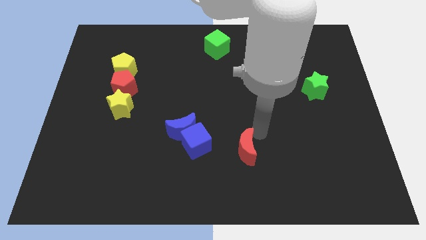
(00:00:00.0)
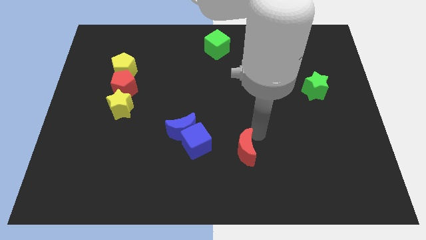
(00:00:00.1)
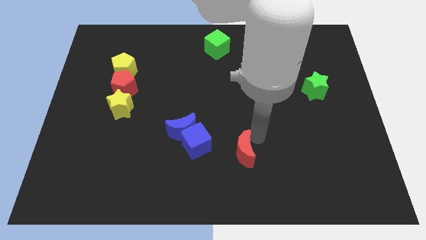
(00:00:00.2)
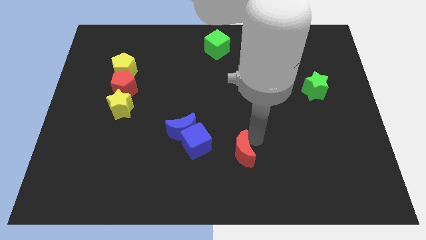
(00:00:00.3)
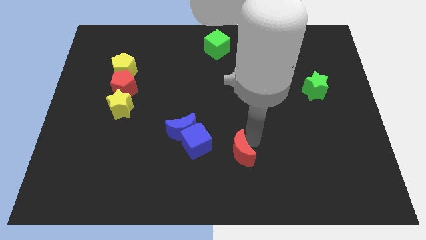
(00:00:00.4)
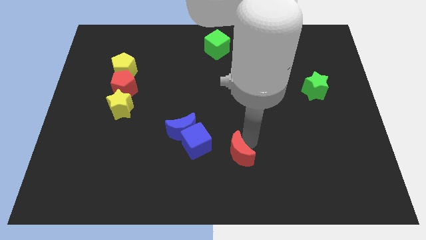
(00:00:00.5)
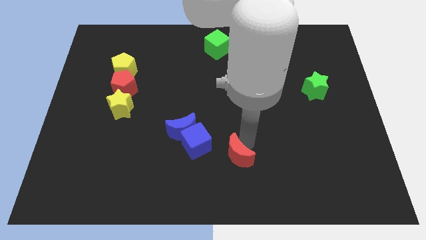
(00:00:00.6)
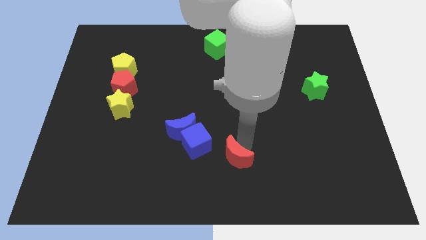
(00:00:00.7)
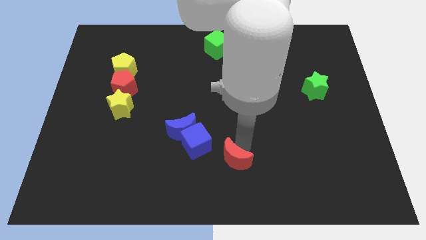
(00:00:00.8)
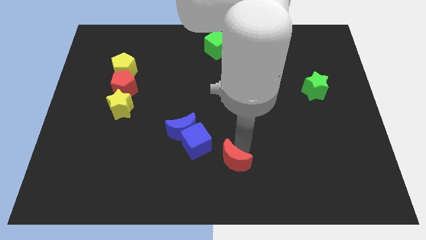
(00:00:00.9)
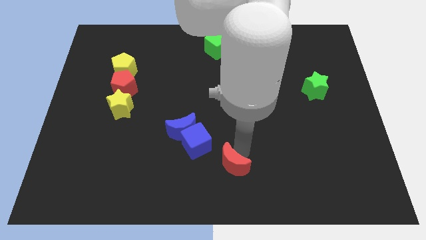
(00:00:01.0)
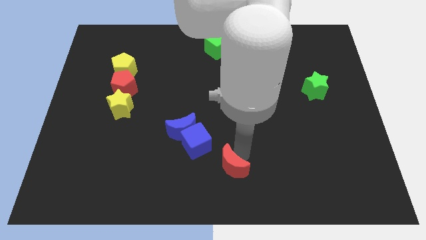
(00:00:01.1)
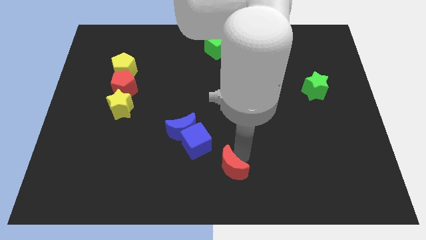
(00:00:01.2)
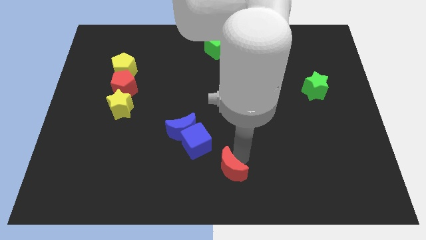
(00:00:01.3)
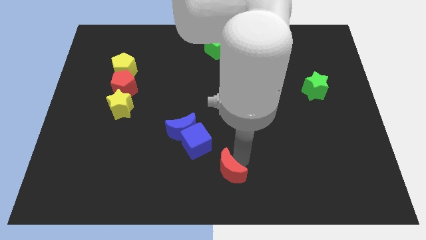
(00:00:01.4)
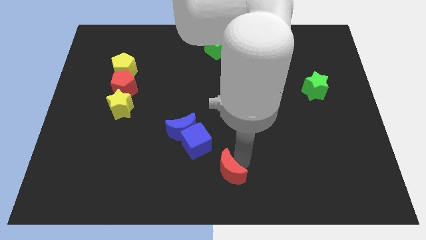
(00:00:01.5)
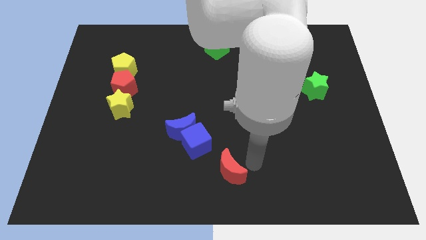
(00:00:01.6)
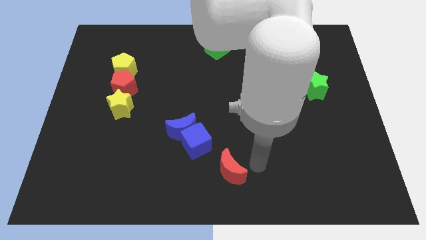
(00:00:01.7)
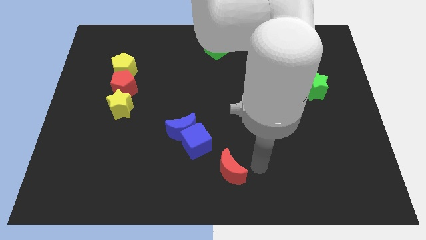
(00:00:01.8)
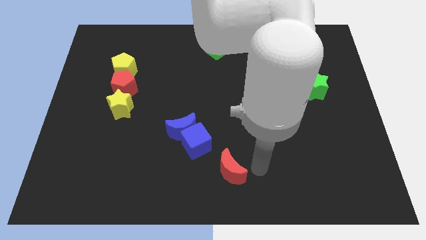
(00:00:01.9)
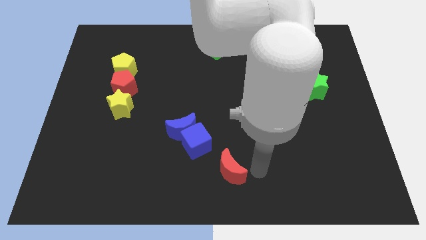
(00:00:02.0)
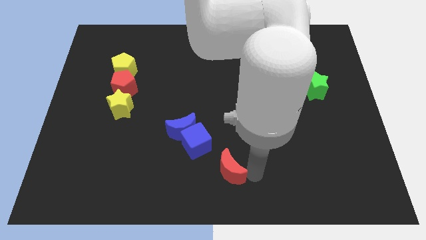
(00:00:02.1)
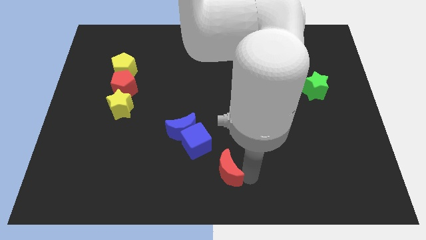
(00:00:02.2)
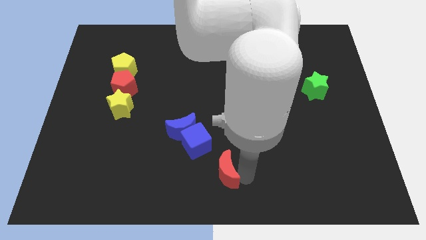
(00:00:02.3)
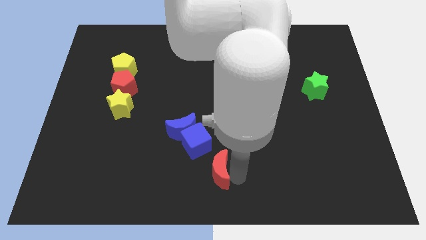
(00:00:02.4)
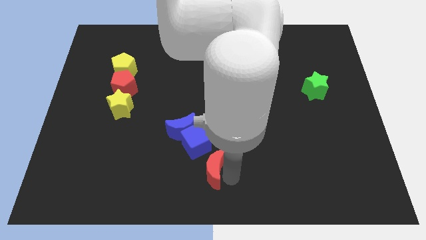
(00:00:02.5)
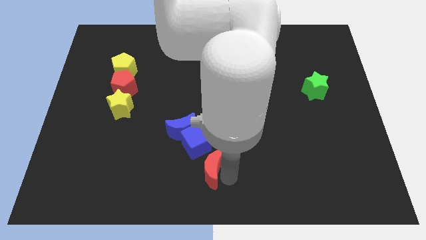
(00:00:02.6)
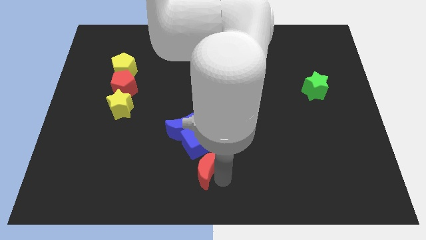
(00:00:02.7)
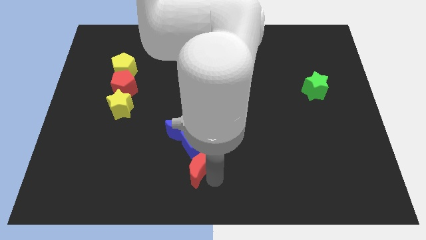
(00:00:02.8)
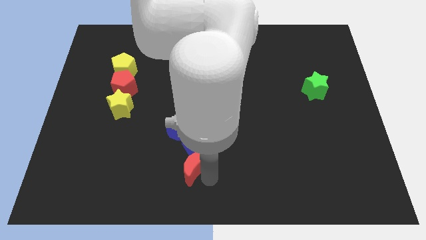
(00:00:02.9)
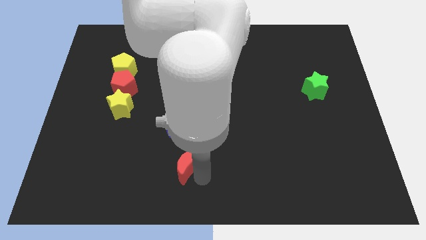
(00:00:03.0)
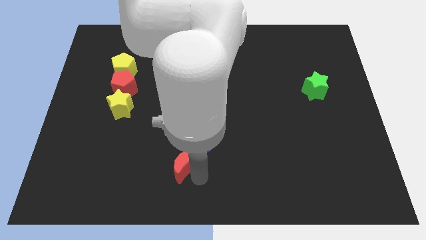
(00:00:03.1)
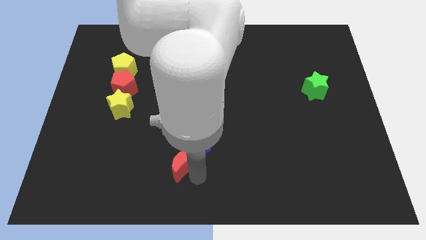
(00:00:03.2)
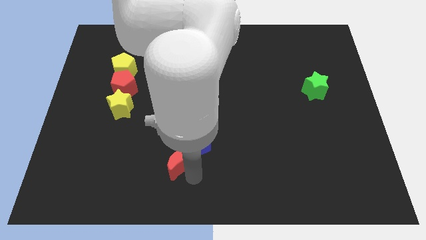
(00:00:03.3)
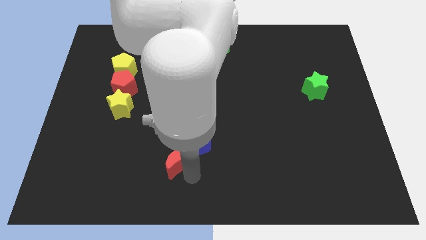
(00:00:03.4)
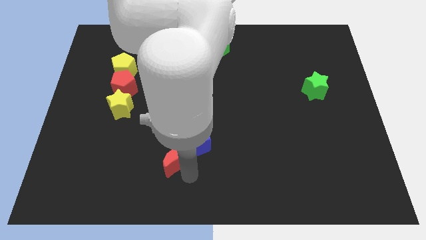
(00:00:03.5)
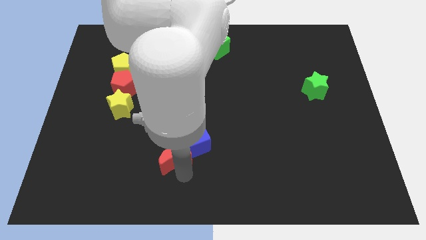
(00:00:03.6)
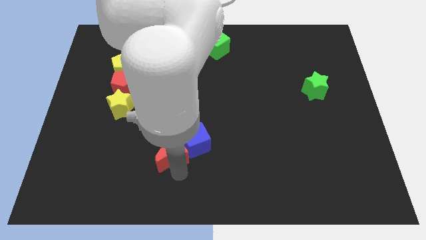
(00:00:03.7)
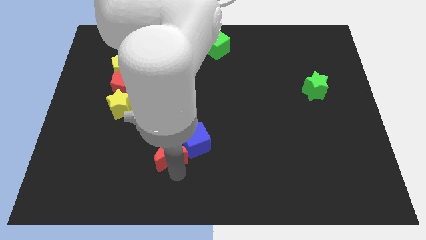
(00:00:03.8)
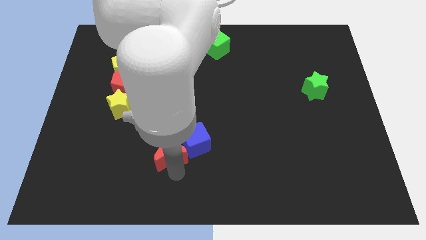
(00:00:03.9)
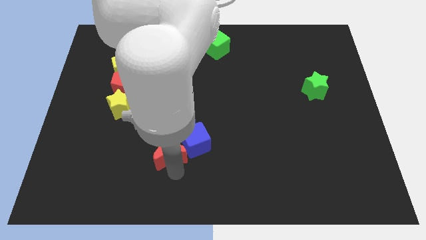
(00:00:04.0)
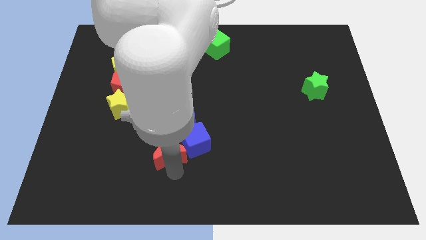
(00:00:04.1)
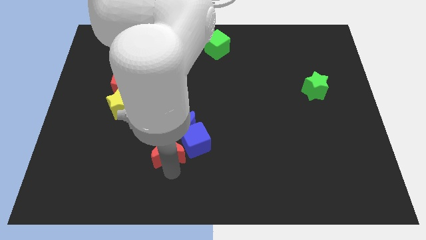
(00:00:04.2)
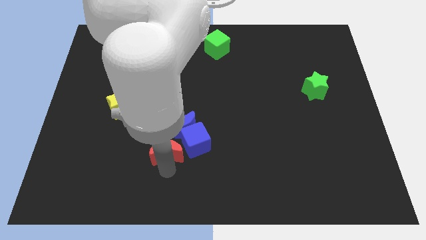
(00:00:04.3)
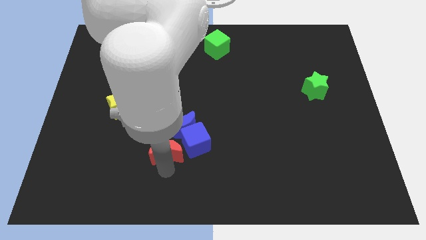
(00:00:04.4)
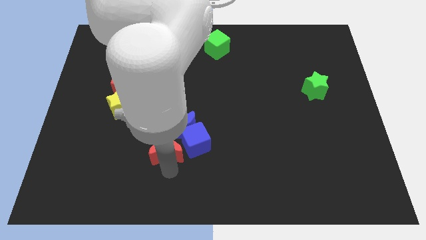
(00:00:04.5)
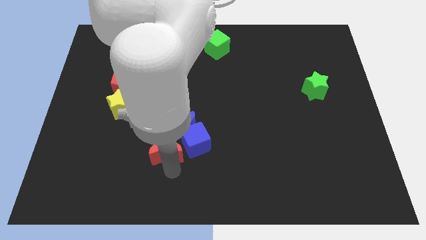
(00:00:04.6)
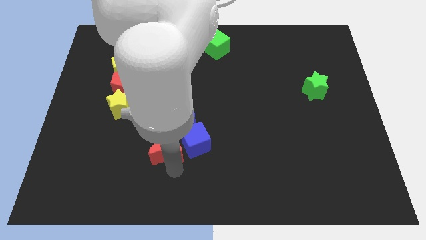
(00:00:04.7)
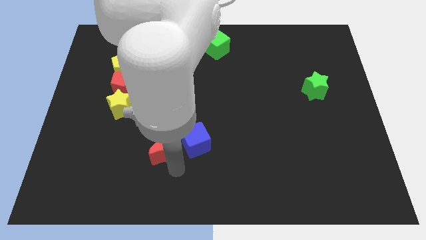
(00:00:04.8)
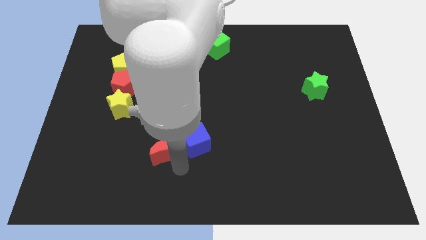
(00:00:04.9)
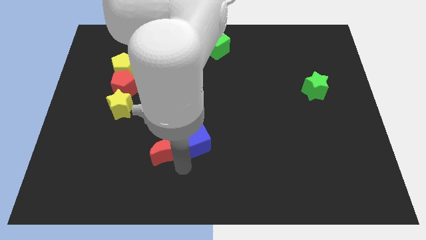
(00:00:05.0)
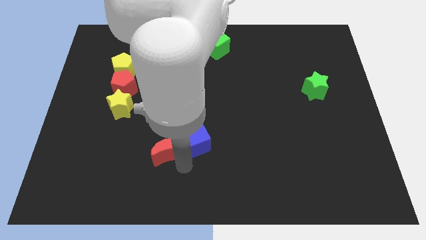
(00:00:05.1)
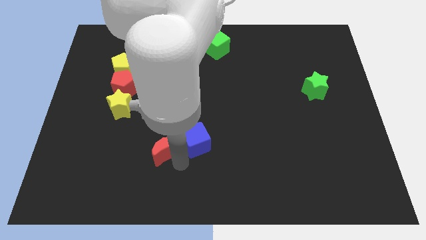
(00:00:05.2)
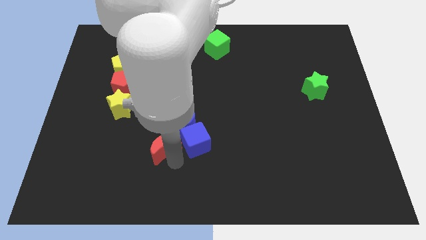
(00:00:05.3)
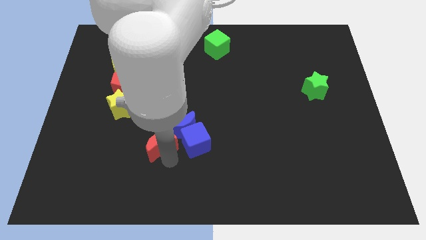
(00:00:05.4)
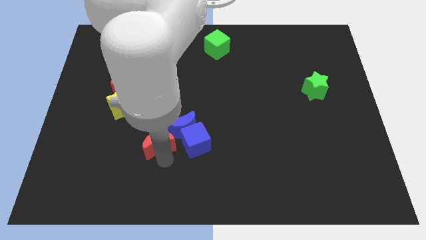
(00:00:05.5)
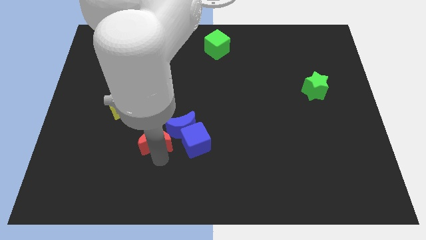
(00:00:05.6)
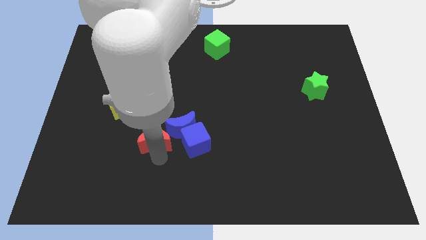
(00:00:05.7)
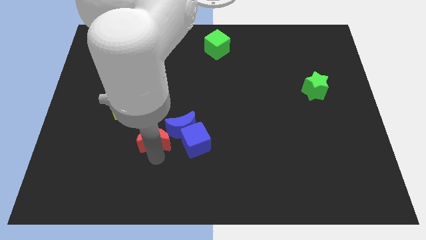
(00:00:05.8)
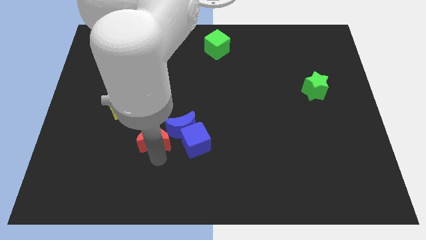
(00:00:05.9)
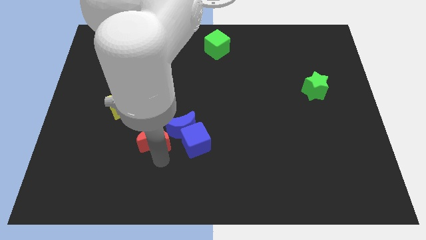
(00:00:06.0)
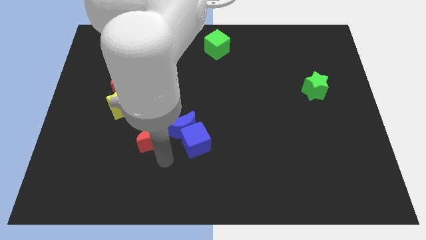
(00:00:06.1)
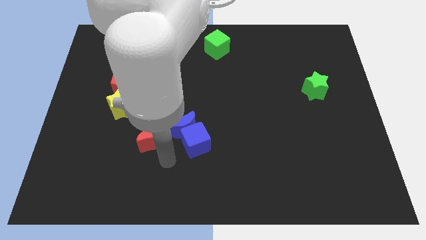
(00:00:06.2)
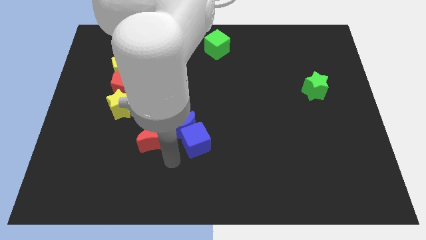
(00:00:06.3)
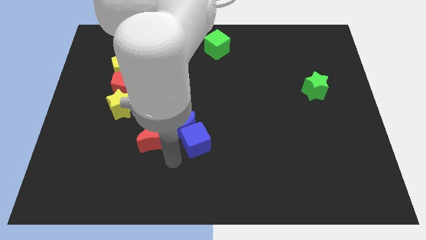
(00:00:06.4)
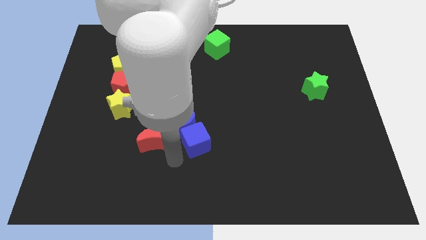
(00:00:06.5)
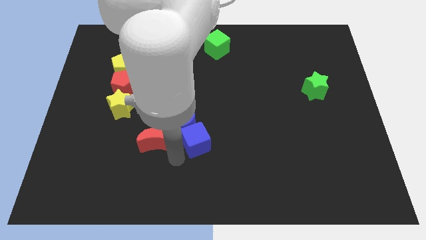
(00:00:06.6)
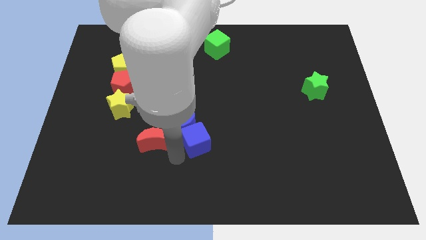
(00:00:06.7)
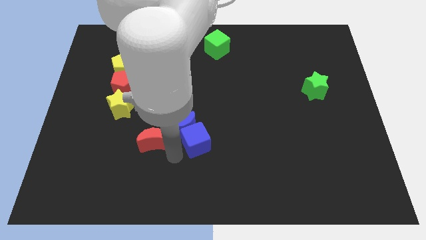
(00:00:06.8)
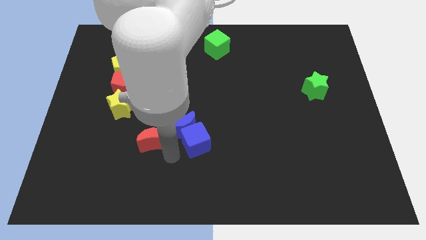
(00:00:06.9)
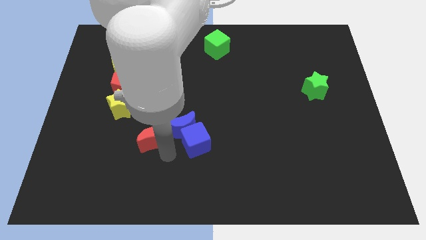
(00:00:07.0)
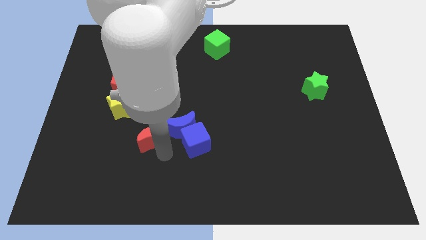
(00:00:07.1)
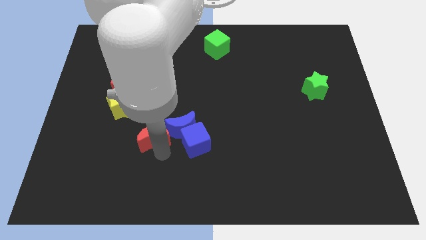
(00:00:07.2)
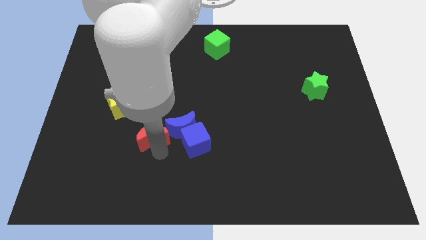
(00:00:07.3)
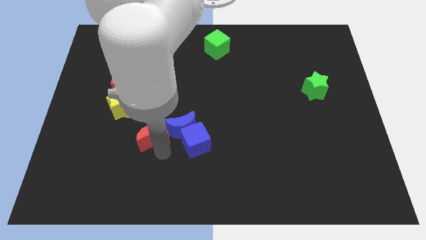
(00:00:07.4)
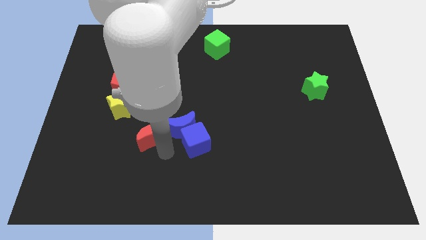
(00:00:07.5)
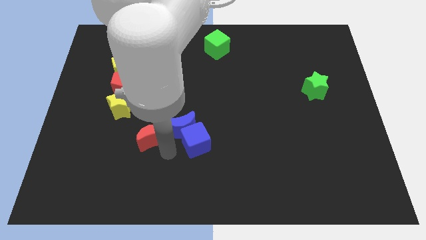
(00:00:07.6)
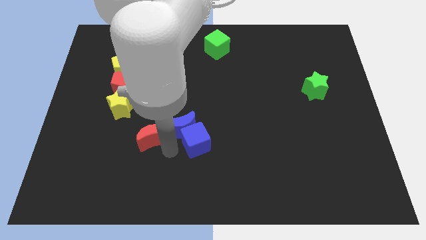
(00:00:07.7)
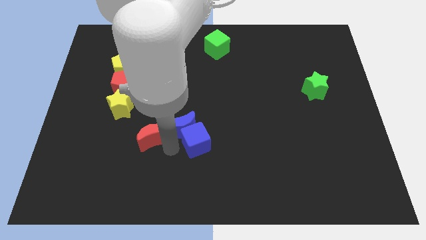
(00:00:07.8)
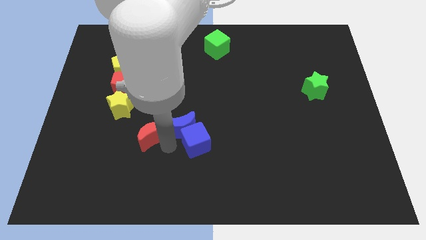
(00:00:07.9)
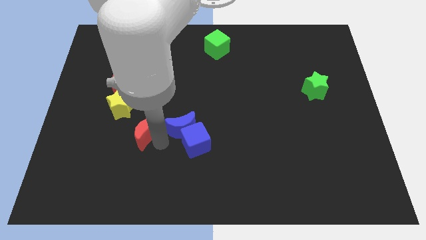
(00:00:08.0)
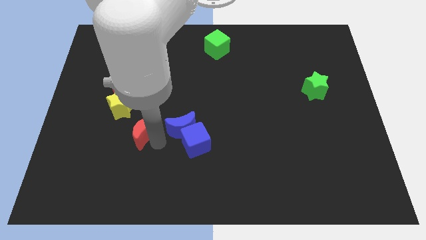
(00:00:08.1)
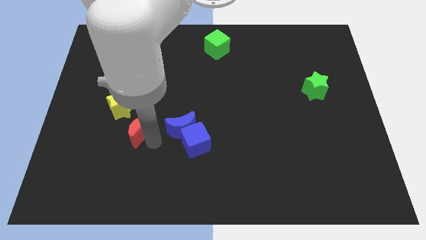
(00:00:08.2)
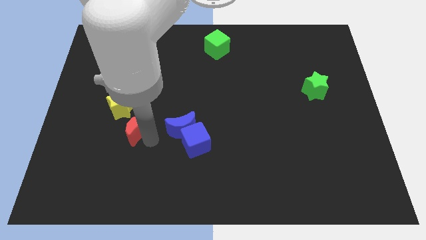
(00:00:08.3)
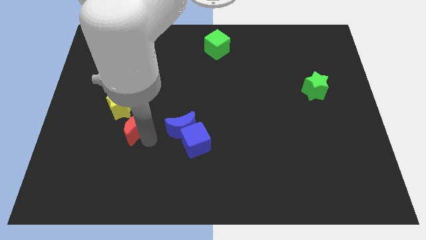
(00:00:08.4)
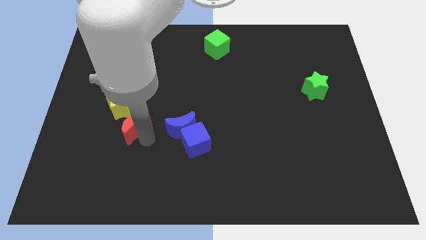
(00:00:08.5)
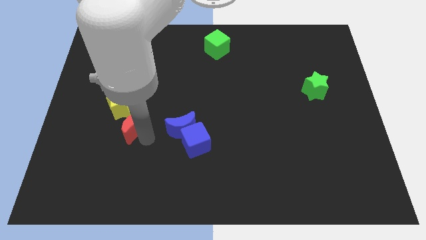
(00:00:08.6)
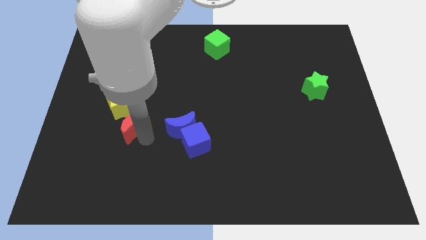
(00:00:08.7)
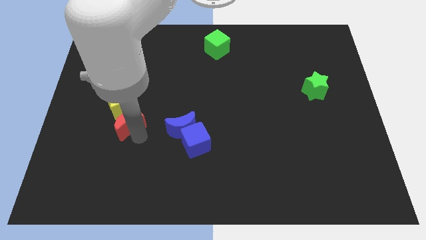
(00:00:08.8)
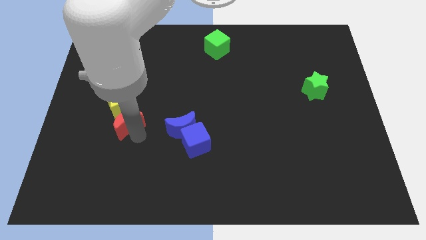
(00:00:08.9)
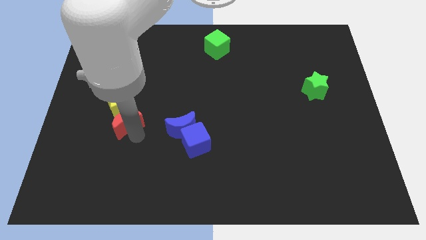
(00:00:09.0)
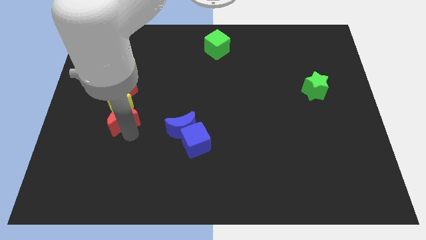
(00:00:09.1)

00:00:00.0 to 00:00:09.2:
move red moon to the left of blue moon
